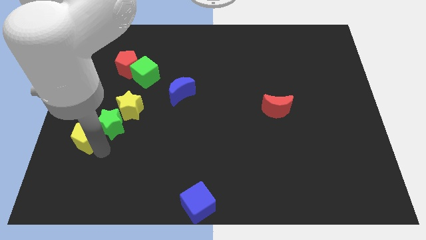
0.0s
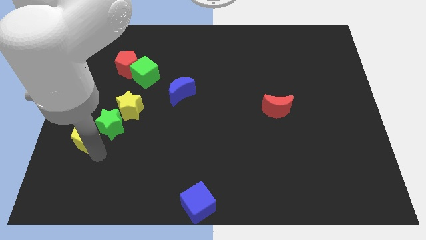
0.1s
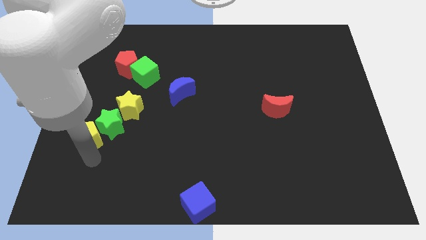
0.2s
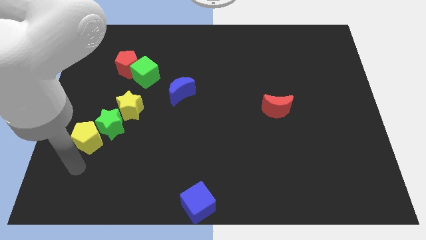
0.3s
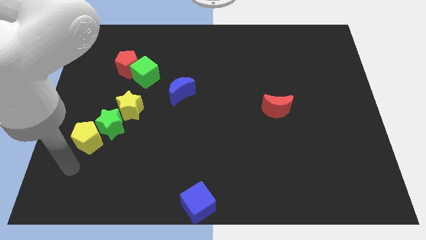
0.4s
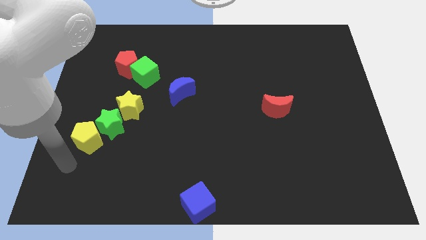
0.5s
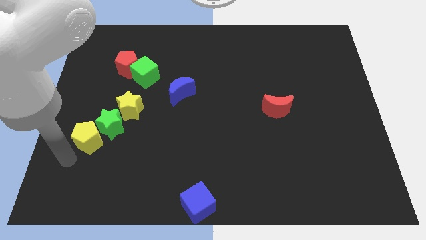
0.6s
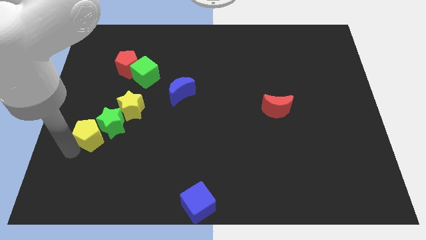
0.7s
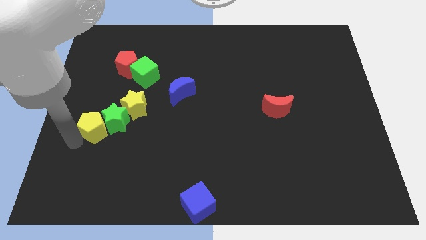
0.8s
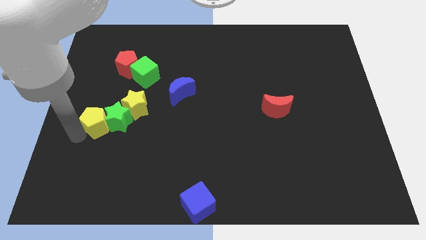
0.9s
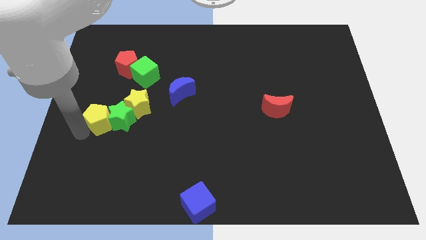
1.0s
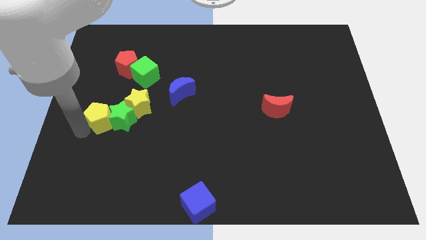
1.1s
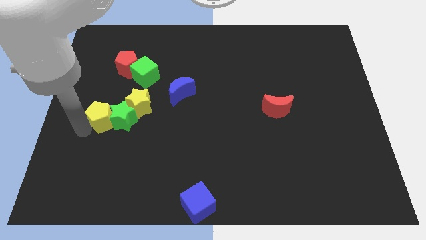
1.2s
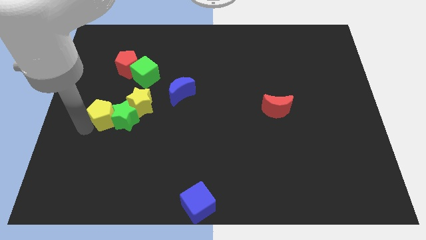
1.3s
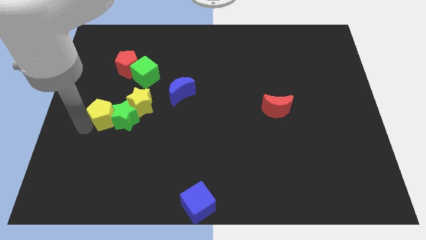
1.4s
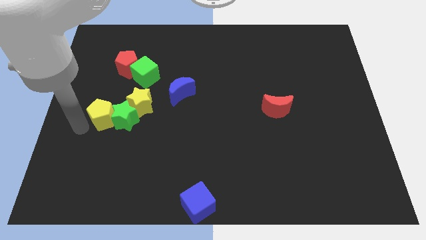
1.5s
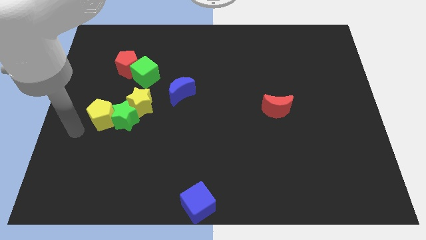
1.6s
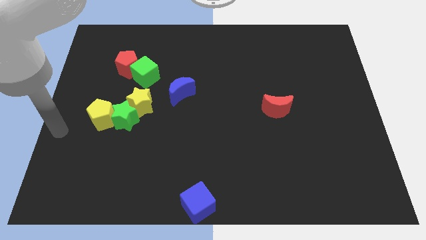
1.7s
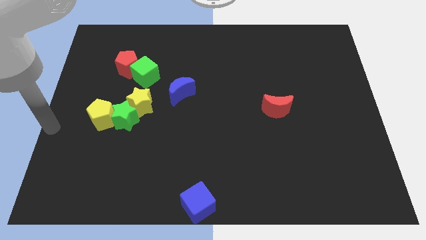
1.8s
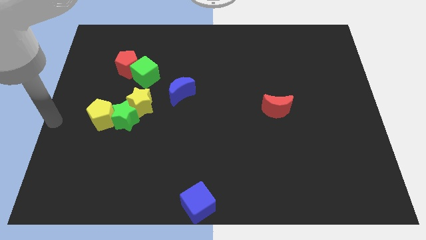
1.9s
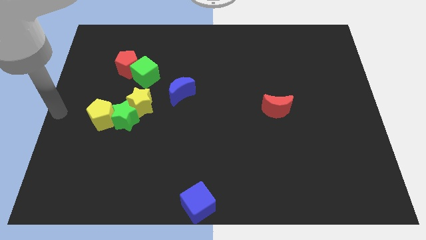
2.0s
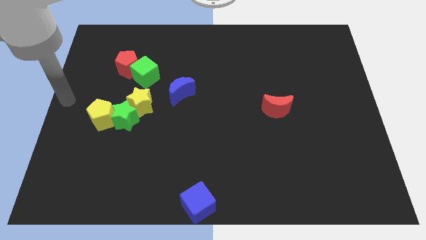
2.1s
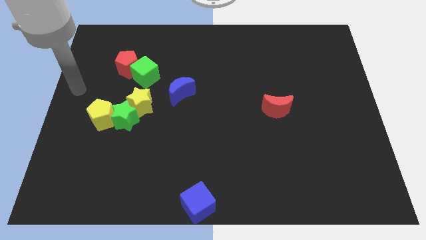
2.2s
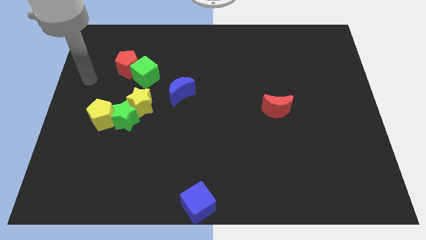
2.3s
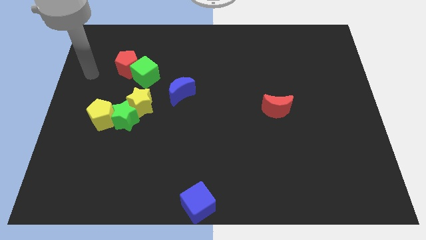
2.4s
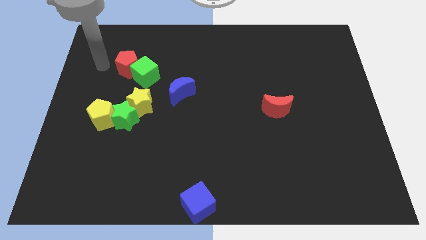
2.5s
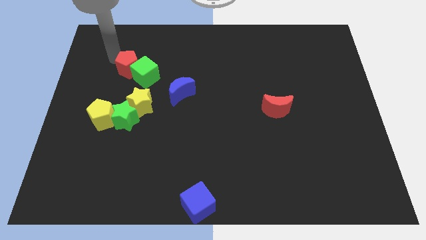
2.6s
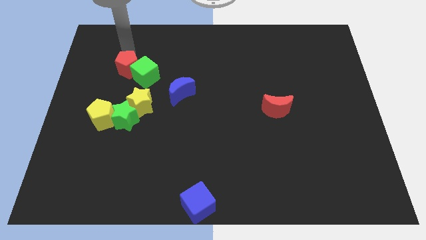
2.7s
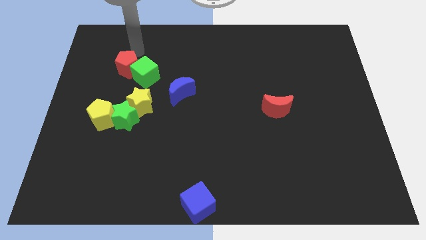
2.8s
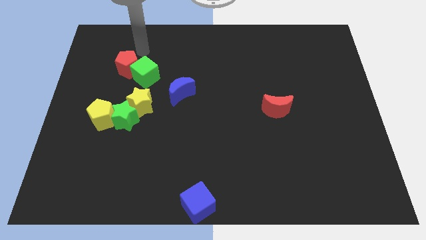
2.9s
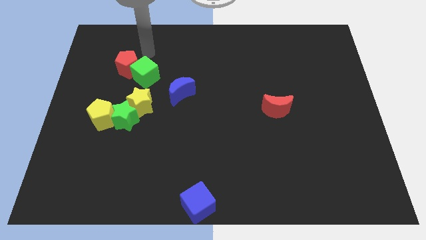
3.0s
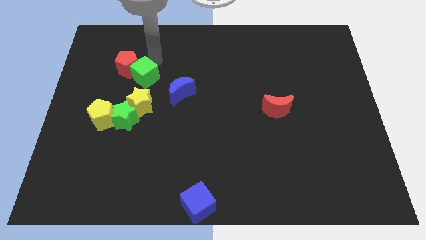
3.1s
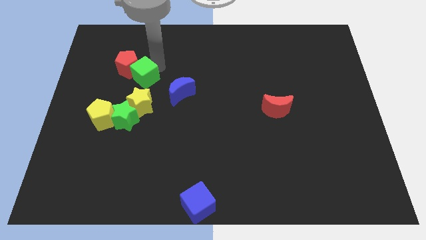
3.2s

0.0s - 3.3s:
push the yellow blocks and green star towards the top side of the board

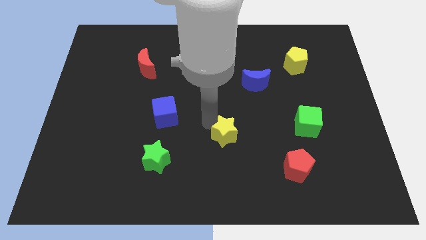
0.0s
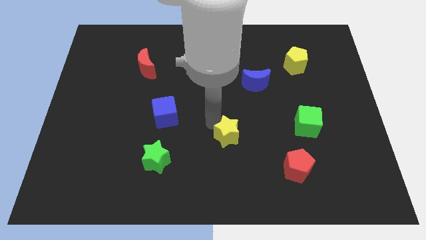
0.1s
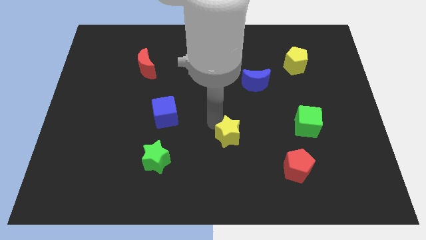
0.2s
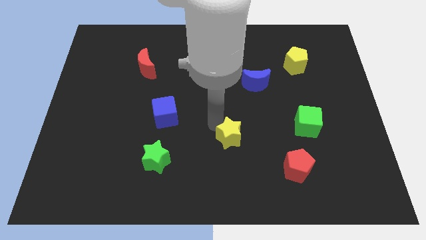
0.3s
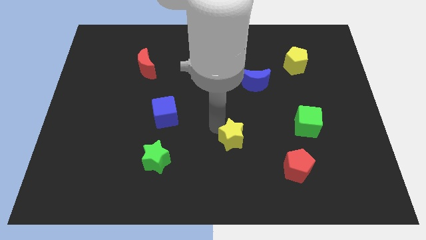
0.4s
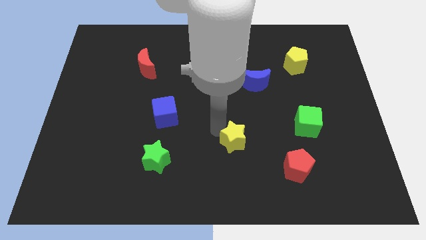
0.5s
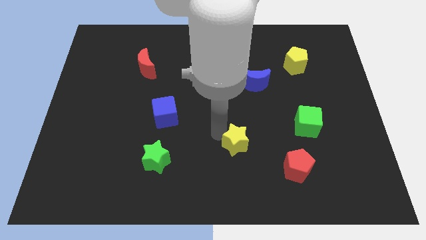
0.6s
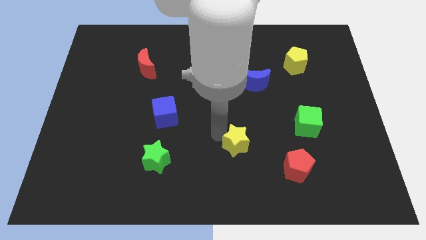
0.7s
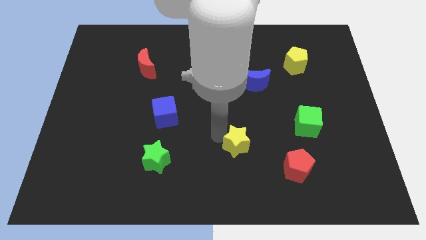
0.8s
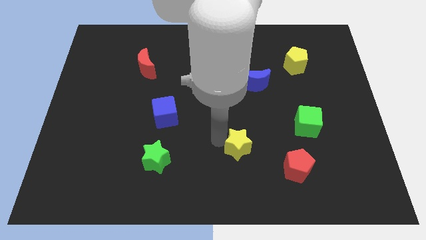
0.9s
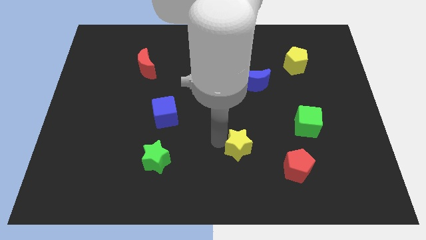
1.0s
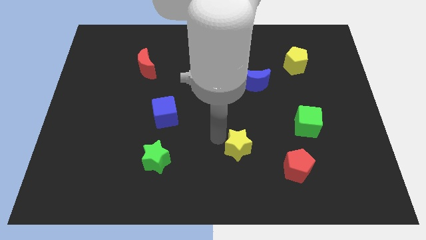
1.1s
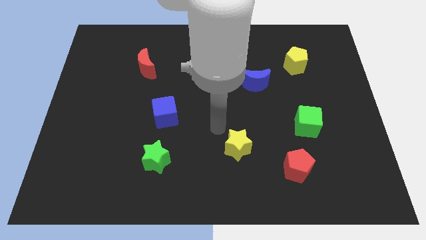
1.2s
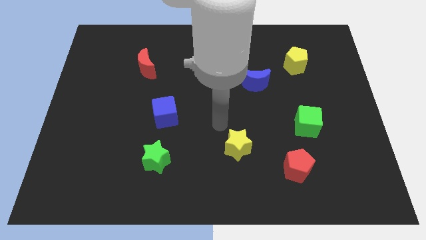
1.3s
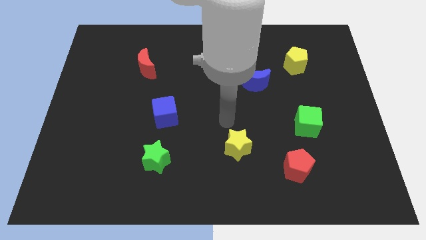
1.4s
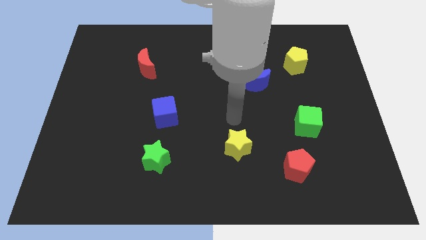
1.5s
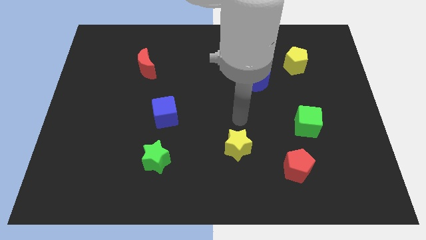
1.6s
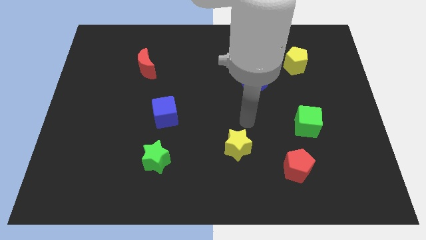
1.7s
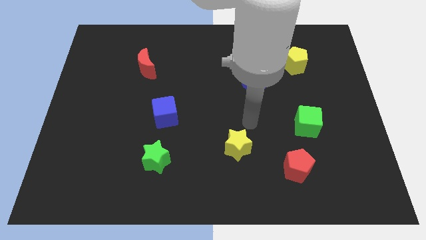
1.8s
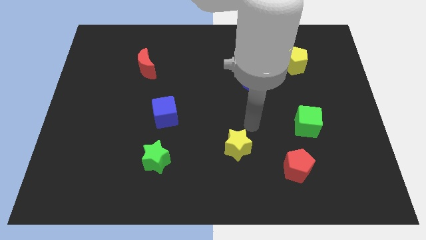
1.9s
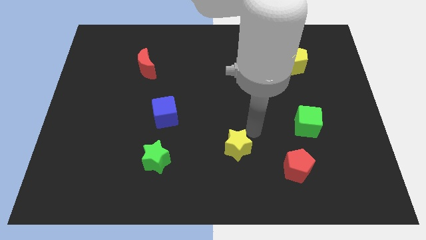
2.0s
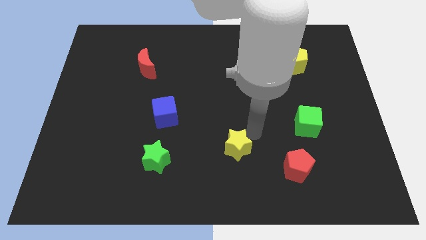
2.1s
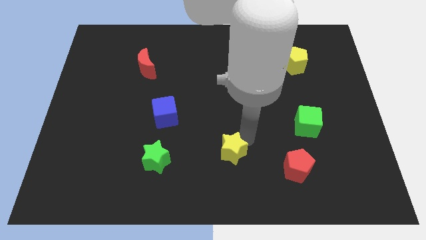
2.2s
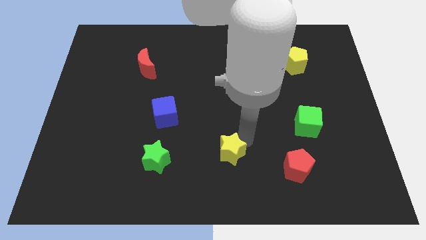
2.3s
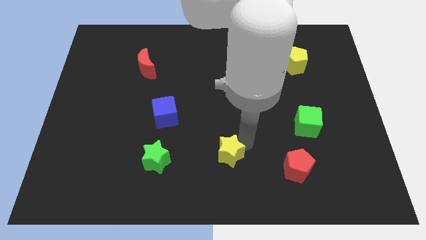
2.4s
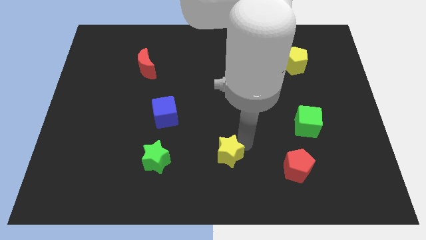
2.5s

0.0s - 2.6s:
move the yellow star towards the bottom

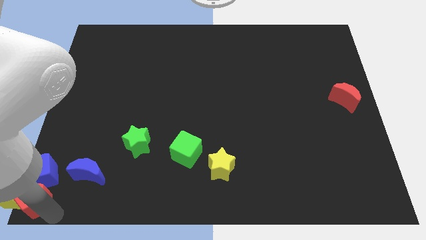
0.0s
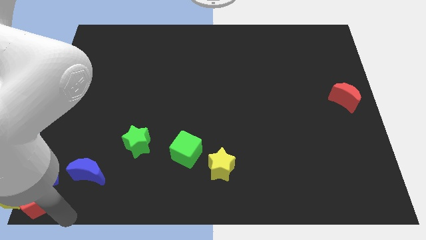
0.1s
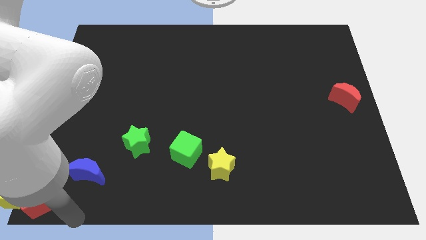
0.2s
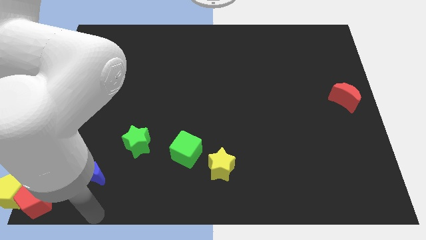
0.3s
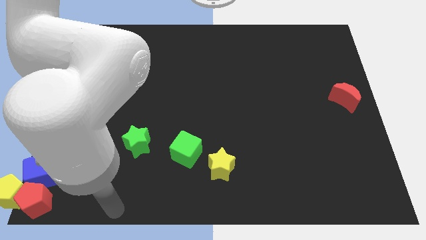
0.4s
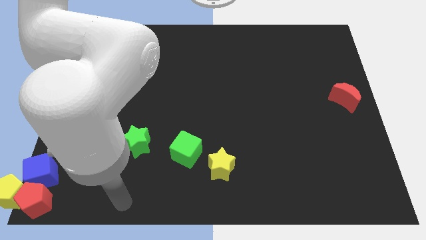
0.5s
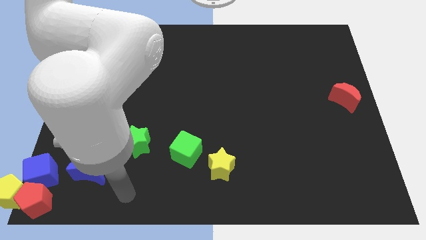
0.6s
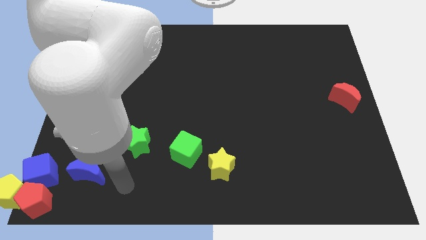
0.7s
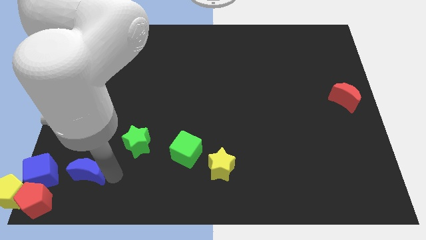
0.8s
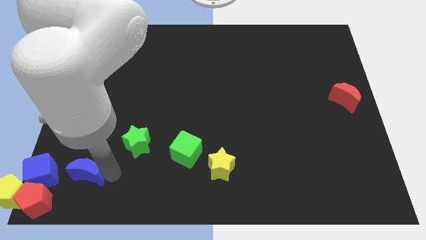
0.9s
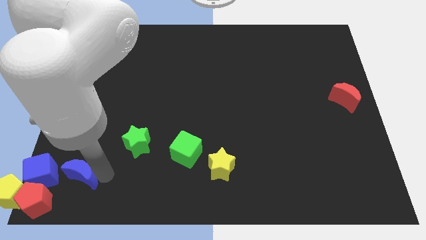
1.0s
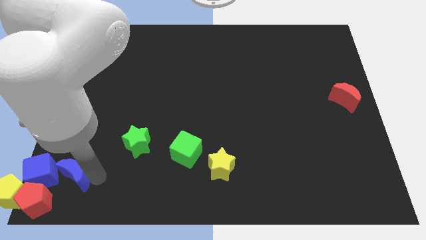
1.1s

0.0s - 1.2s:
place the arm above the blue moon

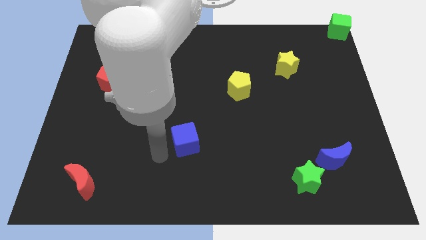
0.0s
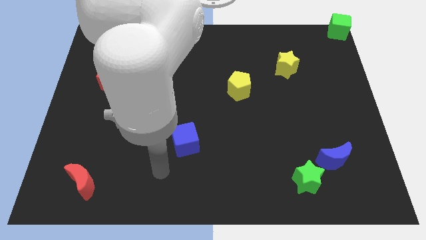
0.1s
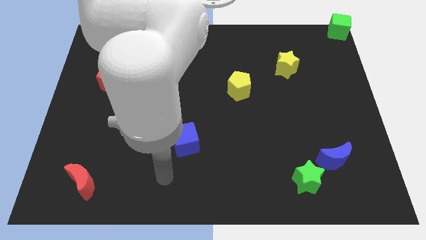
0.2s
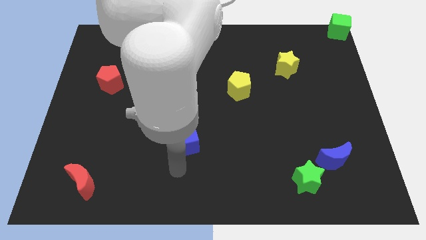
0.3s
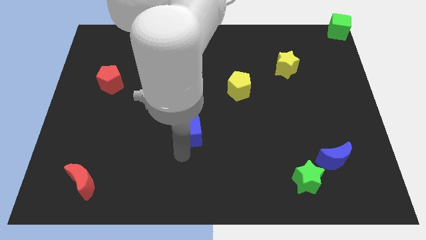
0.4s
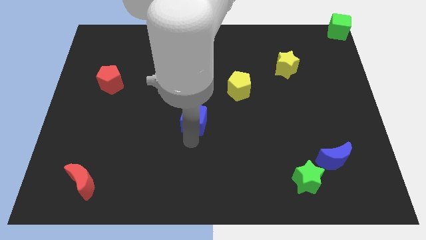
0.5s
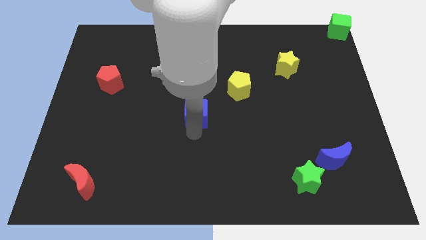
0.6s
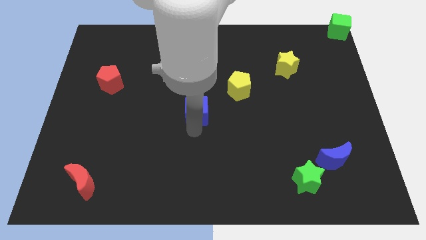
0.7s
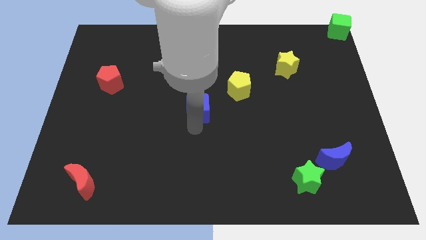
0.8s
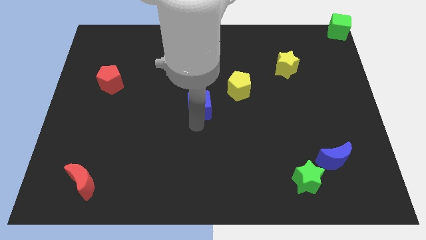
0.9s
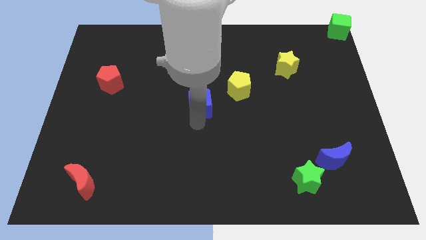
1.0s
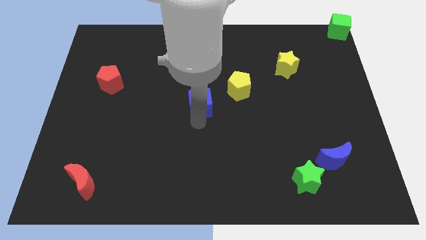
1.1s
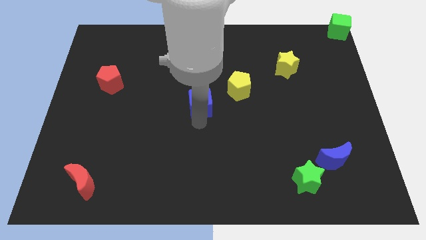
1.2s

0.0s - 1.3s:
move the blue cube towards the center of the board

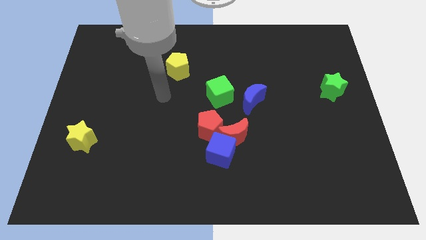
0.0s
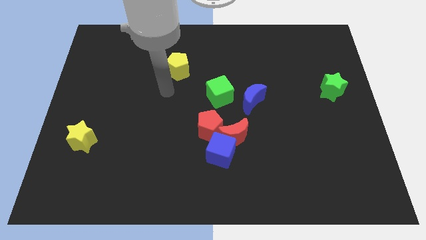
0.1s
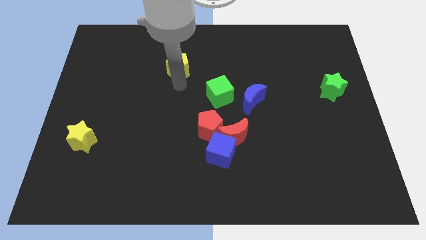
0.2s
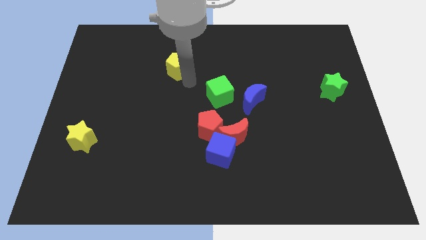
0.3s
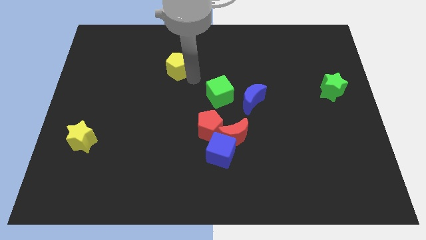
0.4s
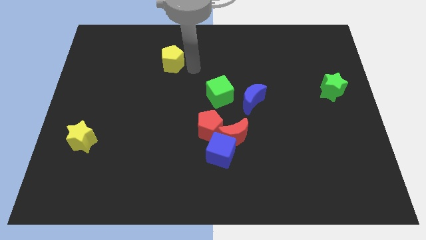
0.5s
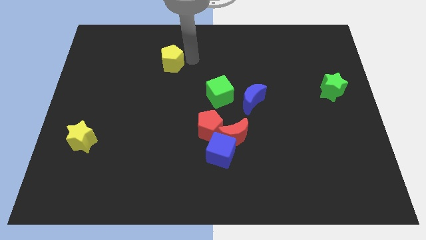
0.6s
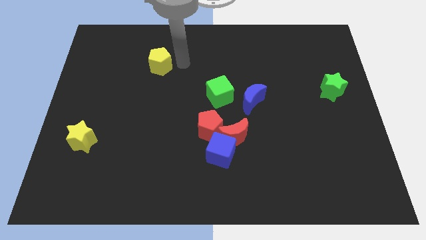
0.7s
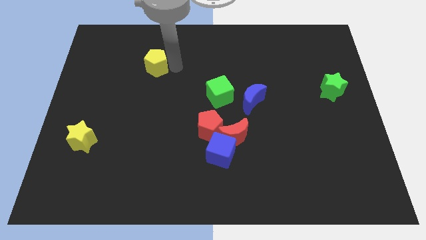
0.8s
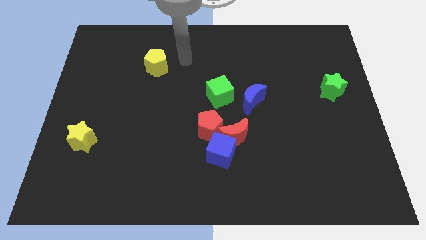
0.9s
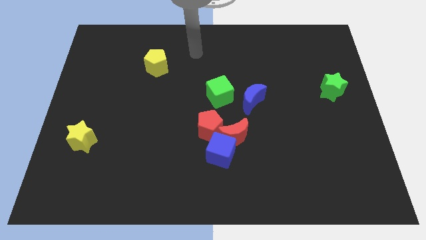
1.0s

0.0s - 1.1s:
move the yellow pentagon slightly to the left
